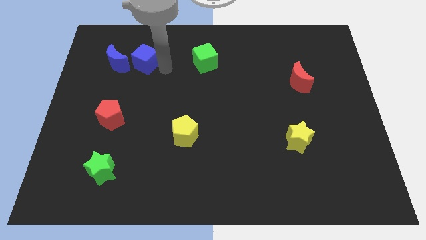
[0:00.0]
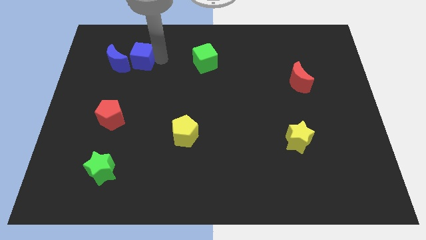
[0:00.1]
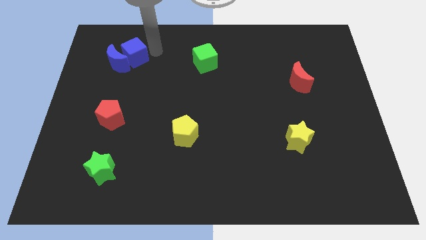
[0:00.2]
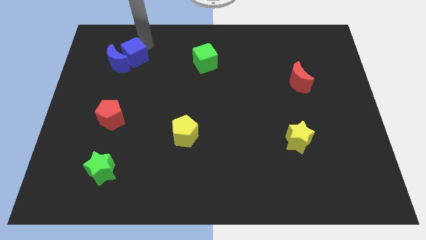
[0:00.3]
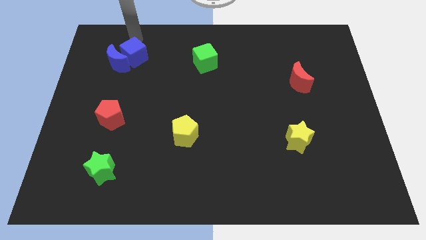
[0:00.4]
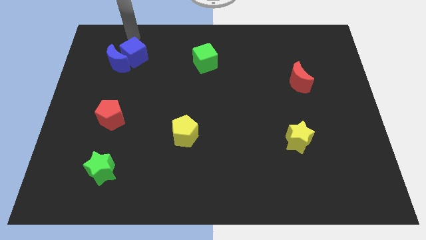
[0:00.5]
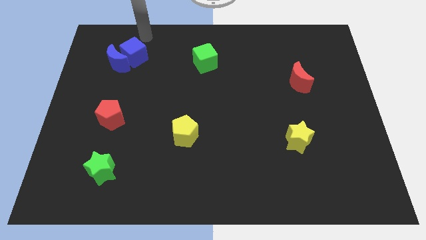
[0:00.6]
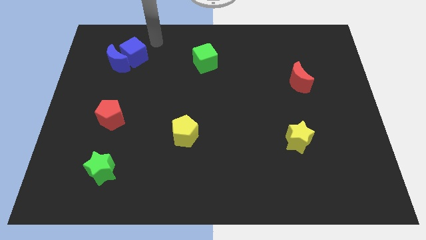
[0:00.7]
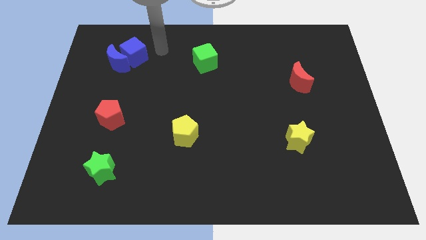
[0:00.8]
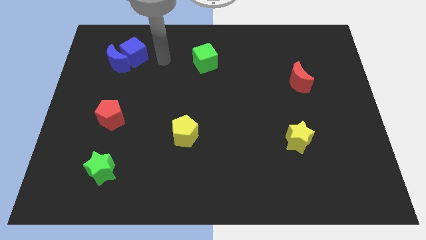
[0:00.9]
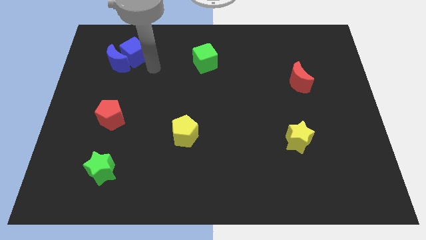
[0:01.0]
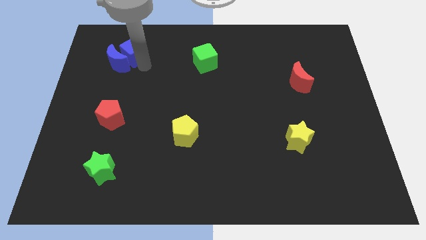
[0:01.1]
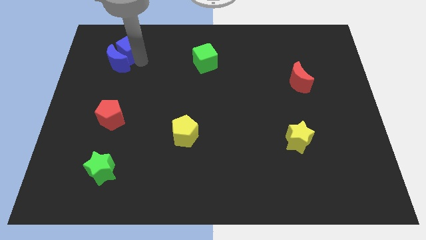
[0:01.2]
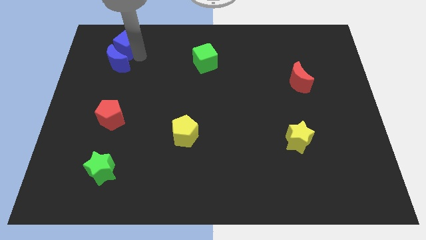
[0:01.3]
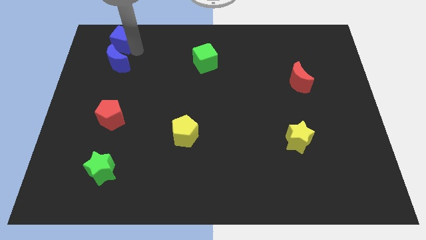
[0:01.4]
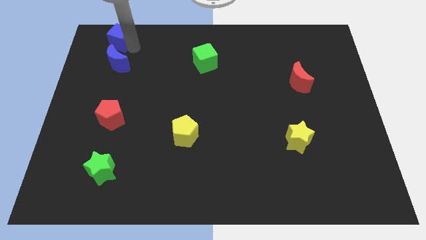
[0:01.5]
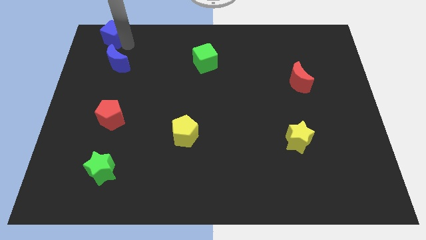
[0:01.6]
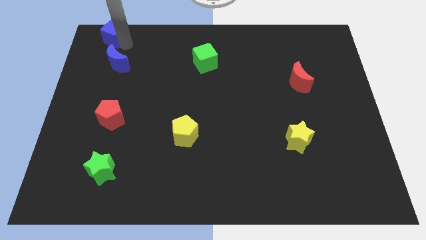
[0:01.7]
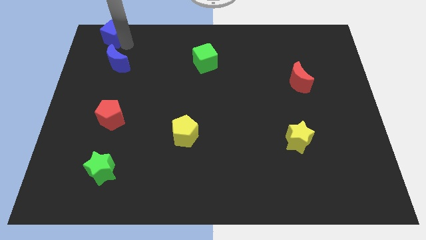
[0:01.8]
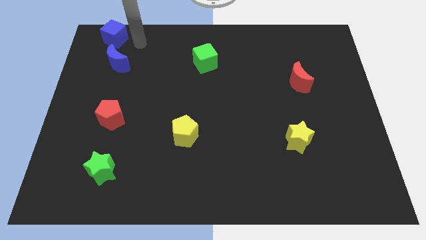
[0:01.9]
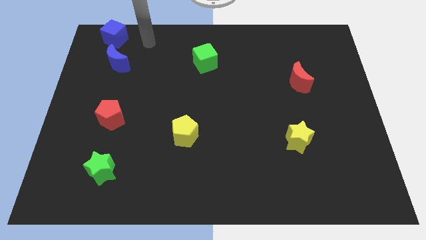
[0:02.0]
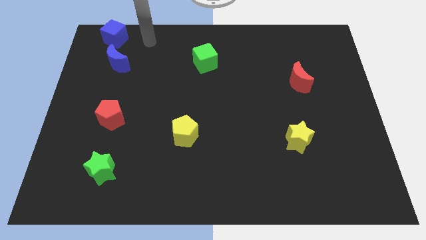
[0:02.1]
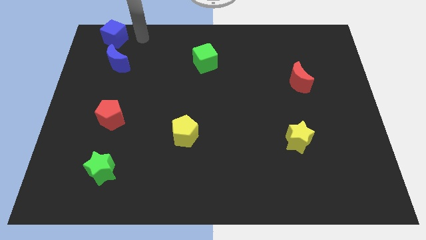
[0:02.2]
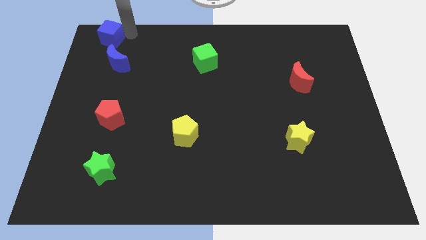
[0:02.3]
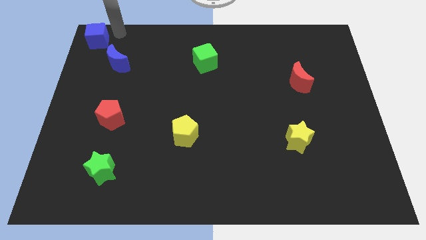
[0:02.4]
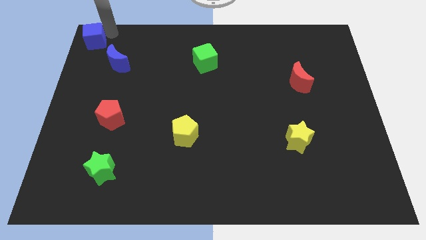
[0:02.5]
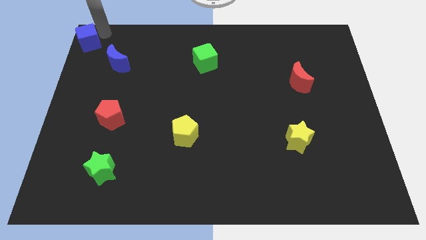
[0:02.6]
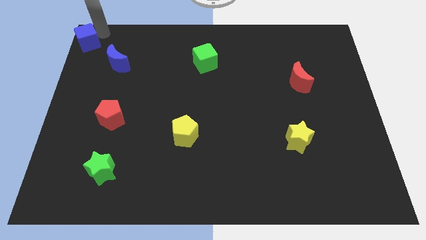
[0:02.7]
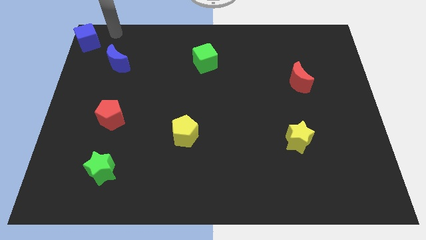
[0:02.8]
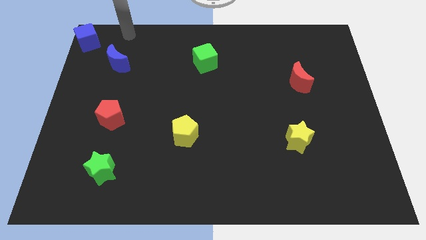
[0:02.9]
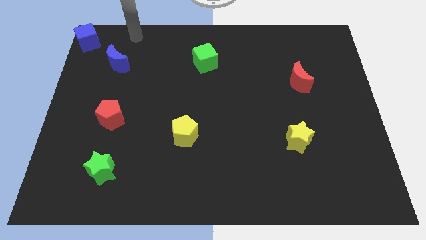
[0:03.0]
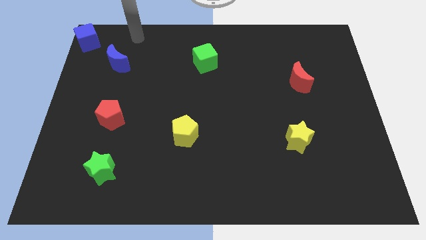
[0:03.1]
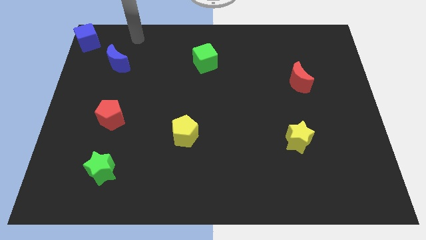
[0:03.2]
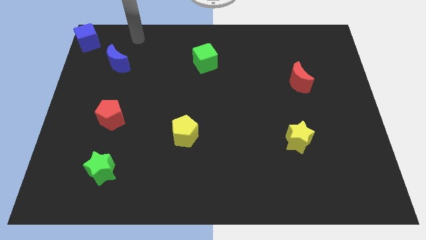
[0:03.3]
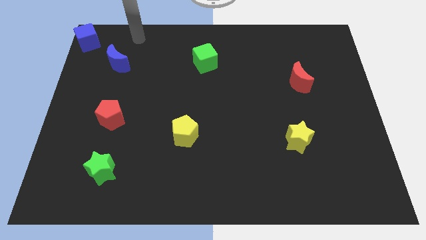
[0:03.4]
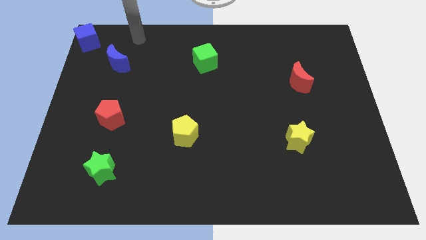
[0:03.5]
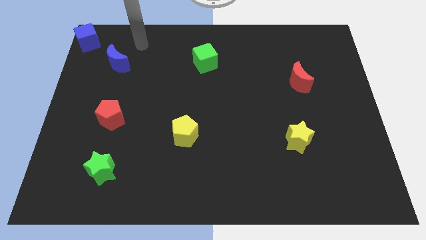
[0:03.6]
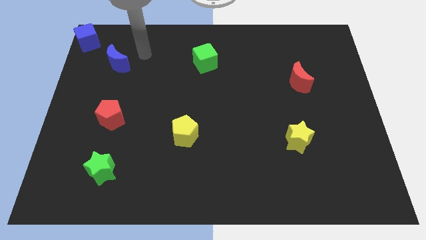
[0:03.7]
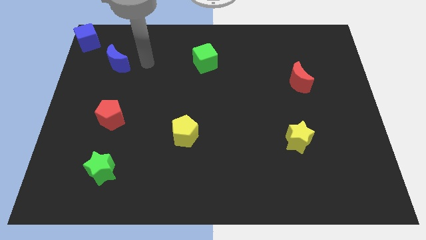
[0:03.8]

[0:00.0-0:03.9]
move the blue to the top left

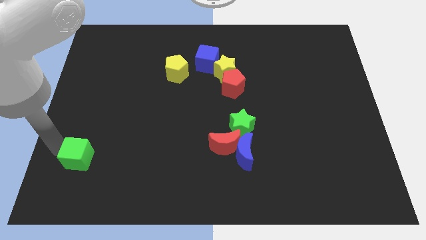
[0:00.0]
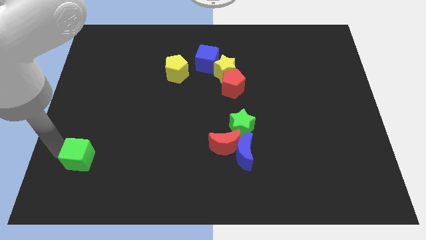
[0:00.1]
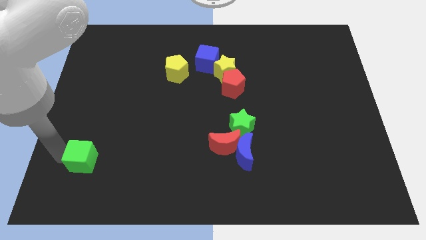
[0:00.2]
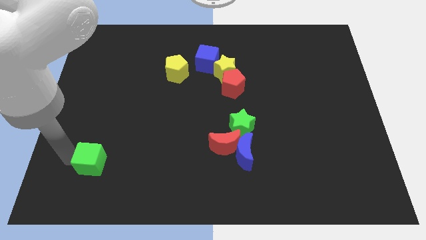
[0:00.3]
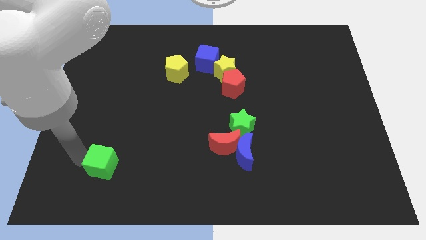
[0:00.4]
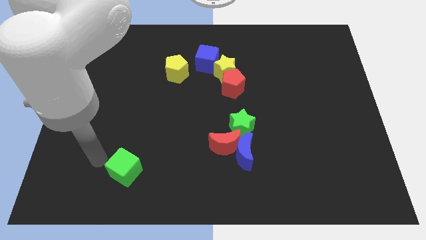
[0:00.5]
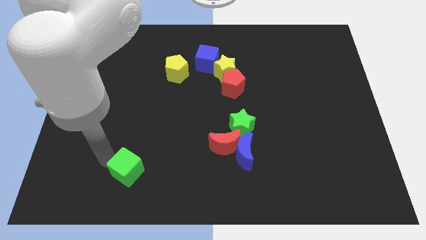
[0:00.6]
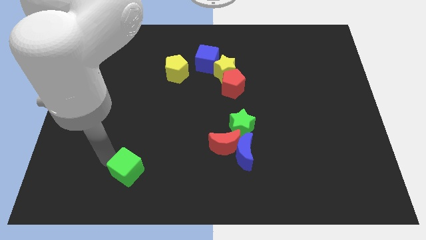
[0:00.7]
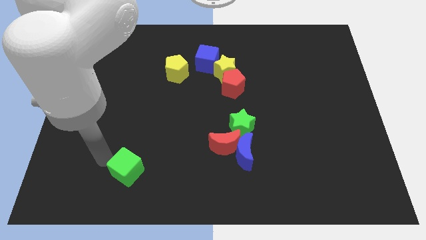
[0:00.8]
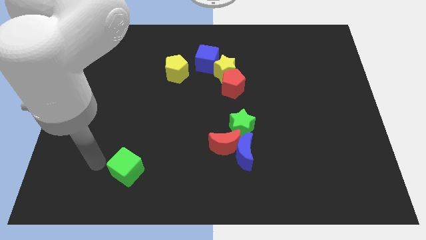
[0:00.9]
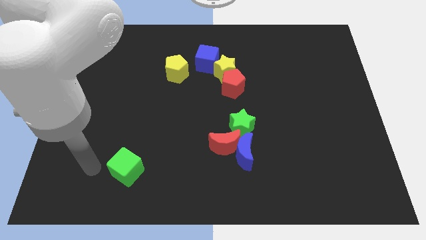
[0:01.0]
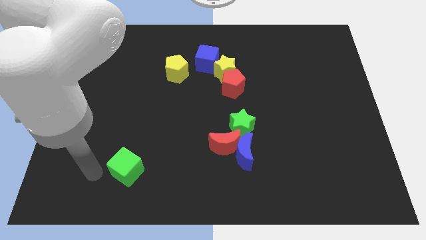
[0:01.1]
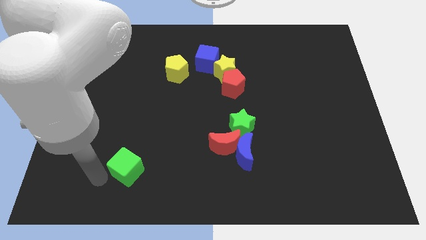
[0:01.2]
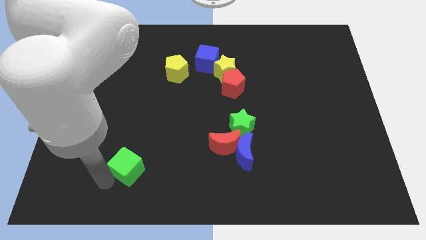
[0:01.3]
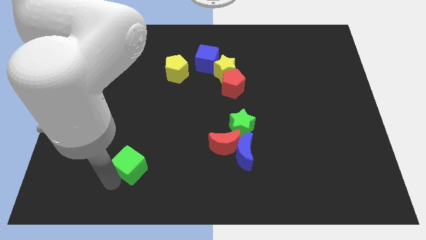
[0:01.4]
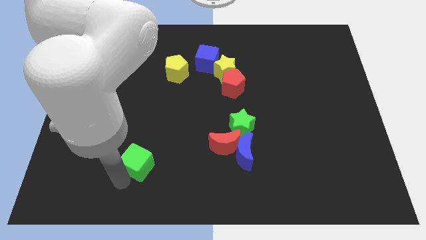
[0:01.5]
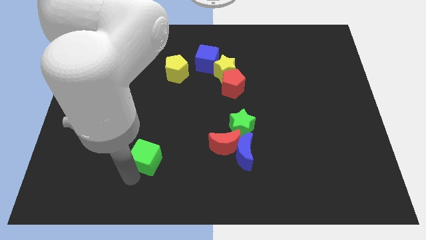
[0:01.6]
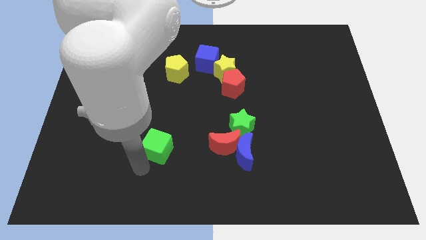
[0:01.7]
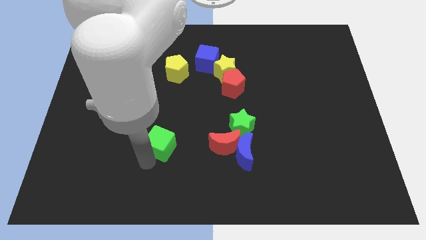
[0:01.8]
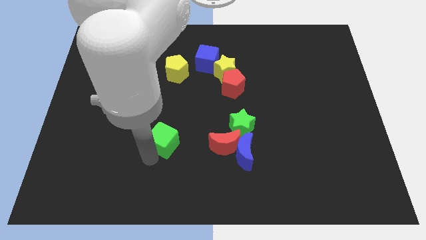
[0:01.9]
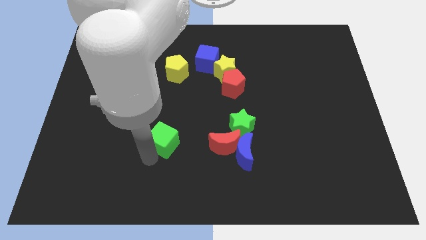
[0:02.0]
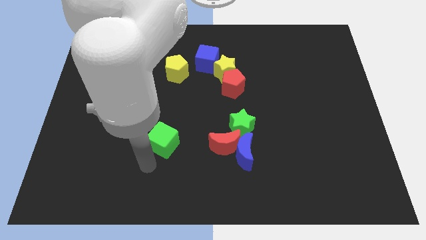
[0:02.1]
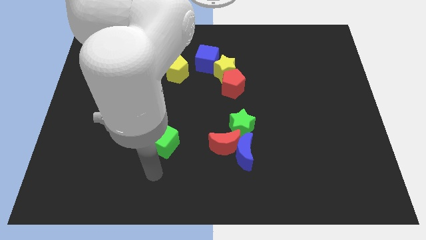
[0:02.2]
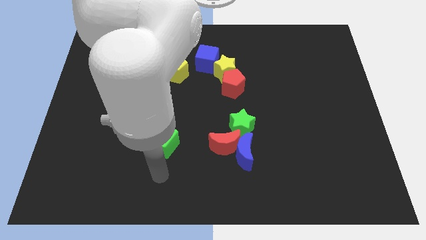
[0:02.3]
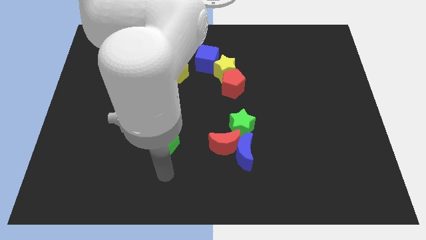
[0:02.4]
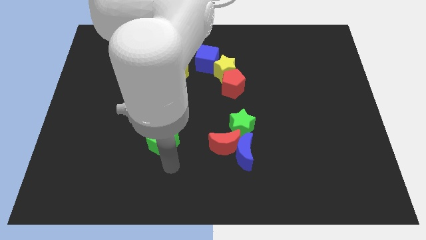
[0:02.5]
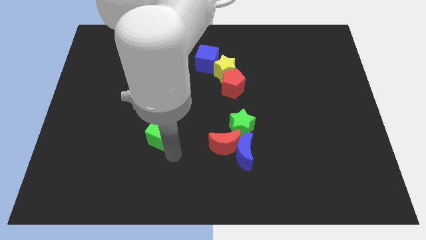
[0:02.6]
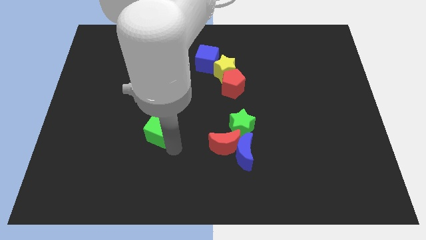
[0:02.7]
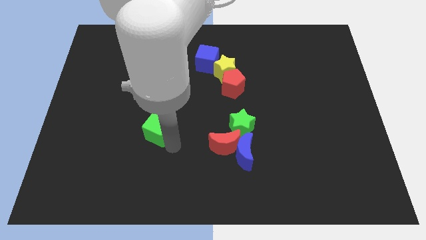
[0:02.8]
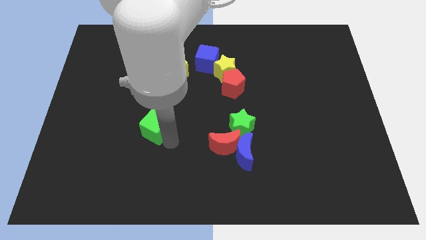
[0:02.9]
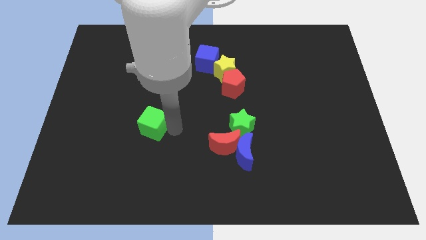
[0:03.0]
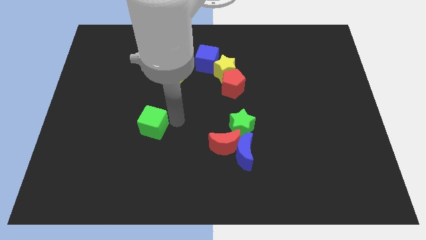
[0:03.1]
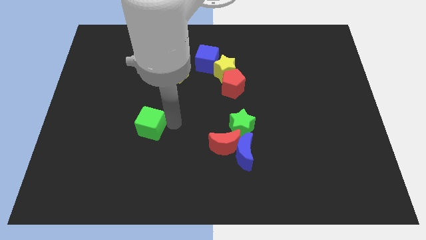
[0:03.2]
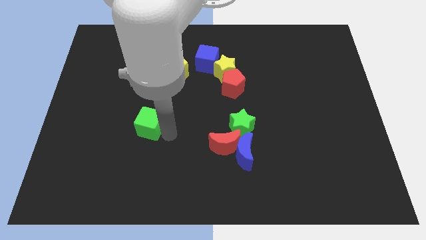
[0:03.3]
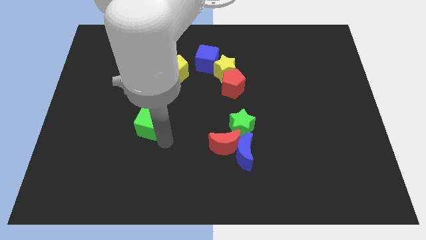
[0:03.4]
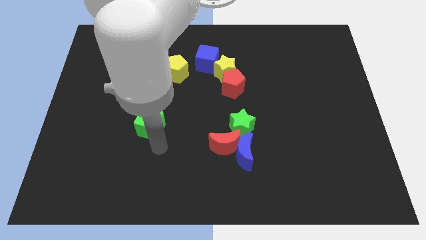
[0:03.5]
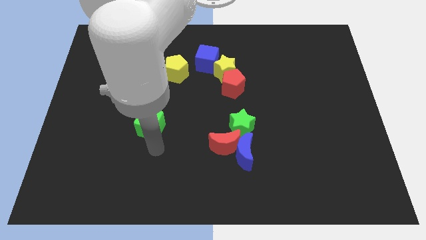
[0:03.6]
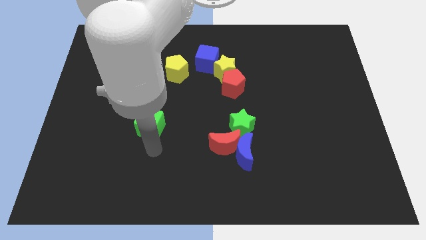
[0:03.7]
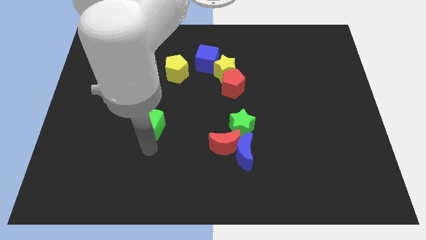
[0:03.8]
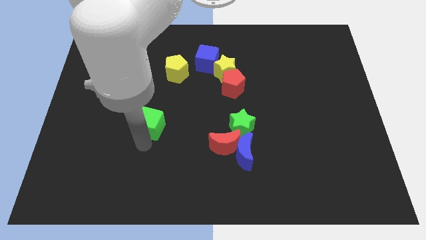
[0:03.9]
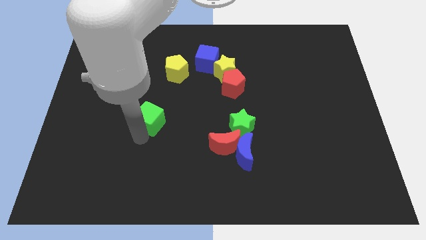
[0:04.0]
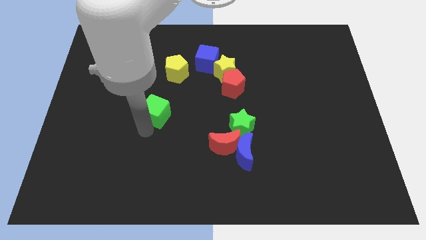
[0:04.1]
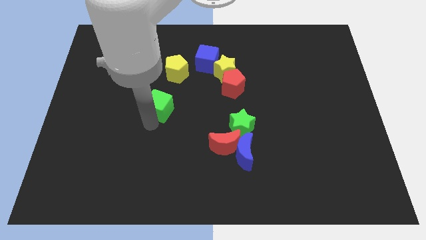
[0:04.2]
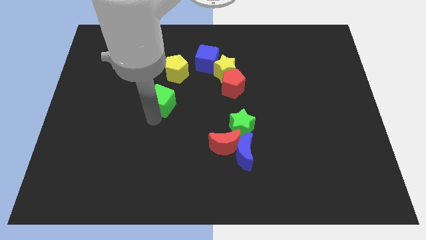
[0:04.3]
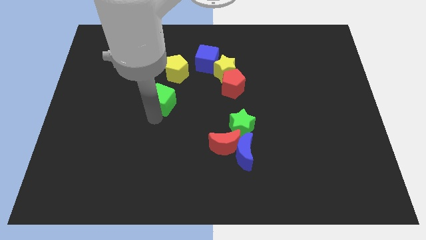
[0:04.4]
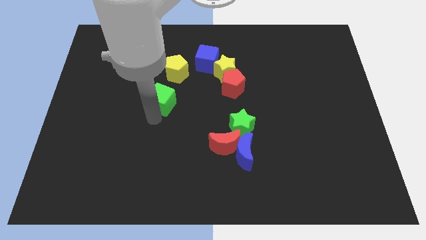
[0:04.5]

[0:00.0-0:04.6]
place the green cube below the yellow pentagon

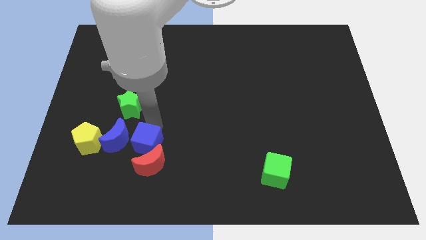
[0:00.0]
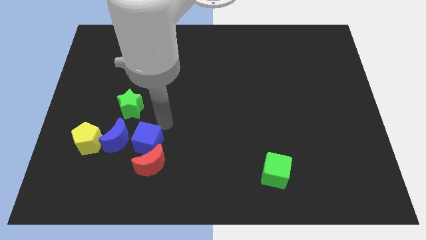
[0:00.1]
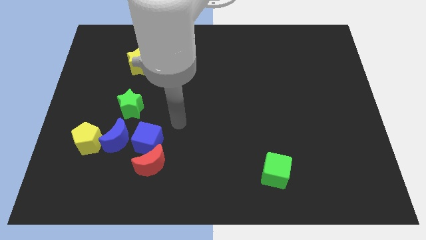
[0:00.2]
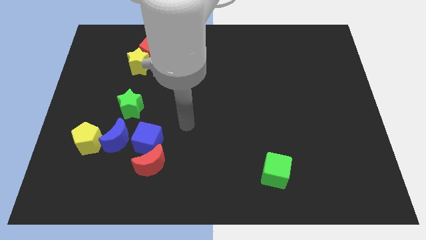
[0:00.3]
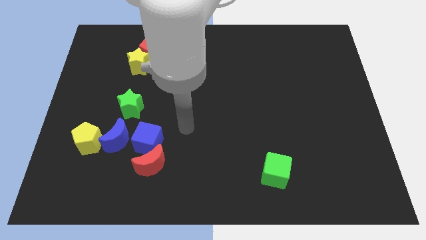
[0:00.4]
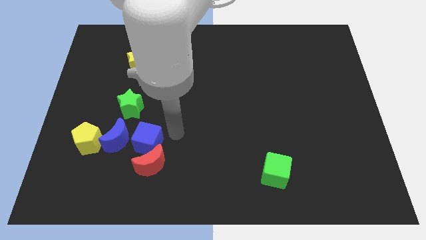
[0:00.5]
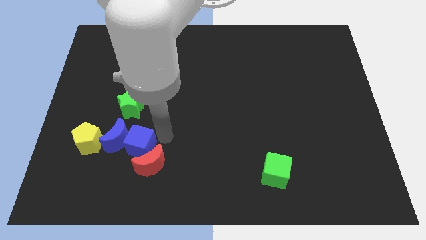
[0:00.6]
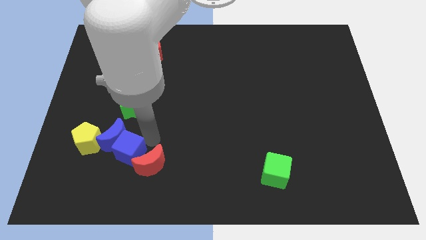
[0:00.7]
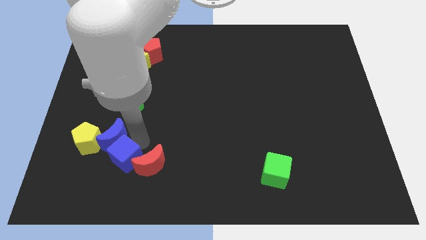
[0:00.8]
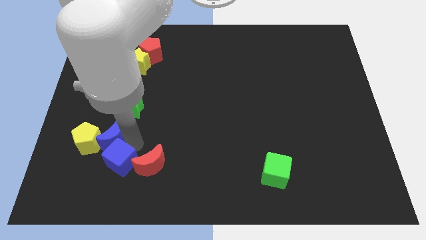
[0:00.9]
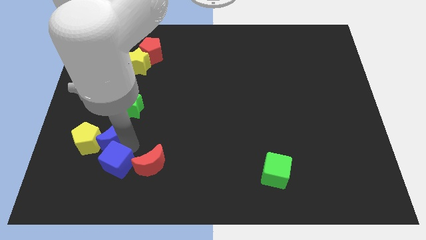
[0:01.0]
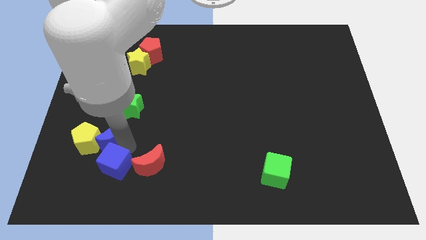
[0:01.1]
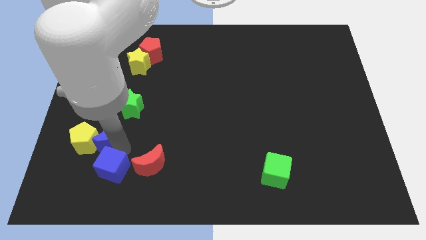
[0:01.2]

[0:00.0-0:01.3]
move the blue cube to the left side of the red crescent
